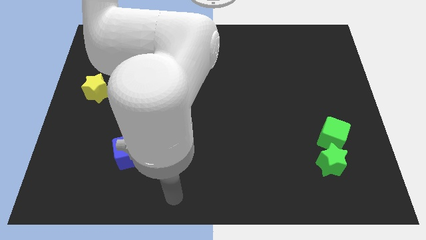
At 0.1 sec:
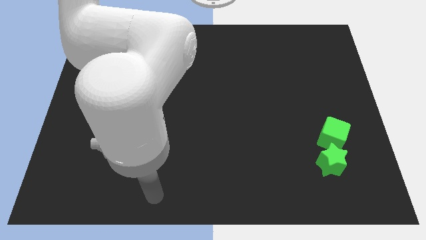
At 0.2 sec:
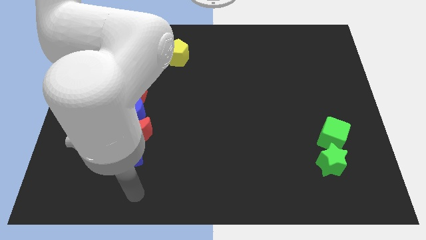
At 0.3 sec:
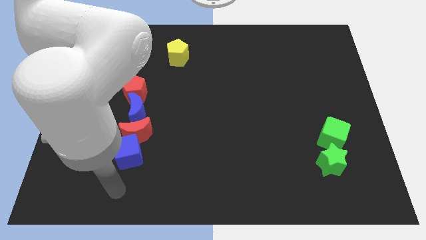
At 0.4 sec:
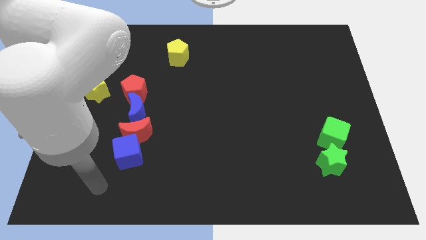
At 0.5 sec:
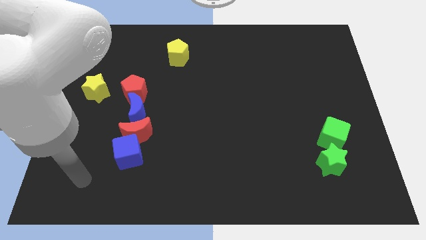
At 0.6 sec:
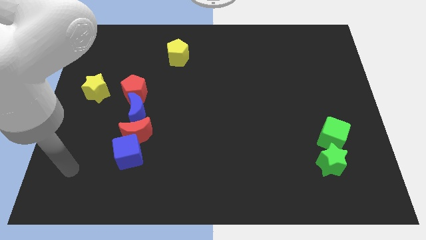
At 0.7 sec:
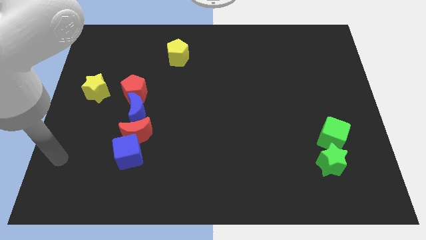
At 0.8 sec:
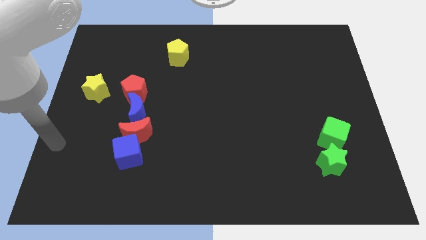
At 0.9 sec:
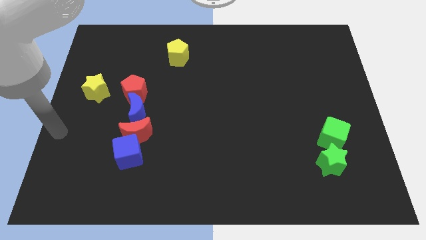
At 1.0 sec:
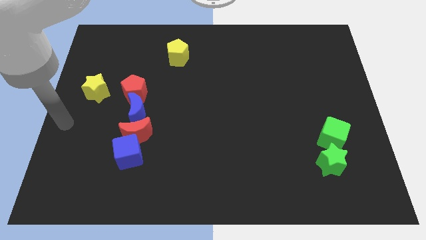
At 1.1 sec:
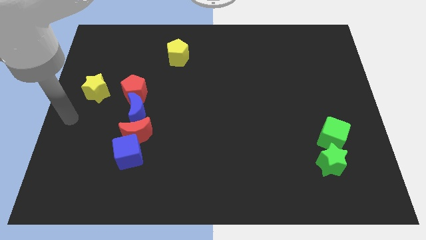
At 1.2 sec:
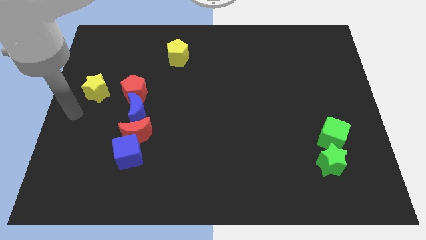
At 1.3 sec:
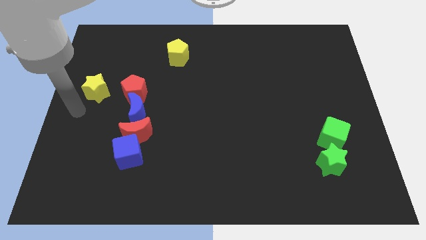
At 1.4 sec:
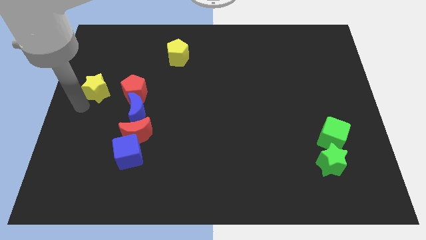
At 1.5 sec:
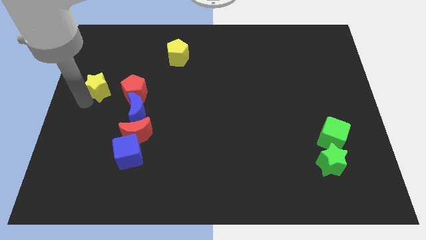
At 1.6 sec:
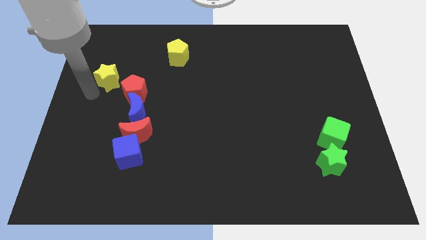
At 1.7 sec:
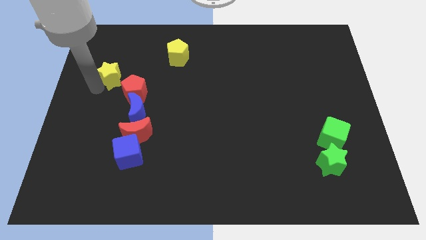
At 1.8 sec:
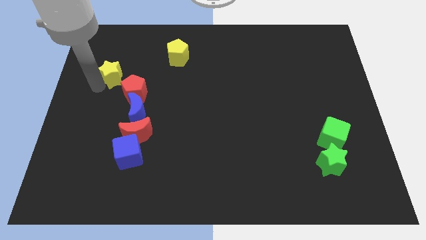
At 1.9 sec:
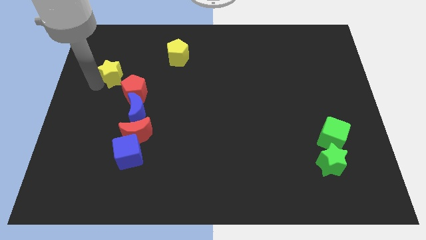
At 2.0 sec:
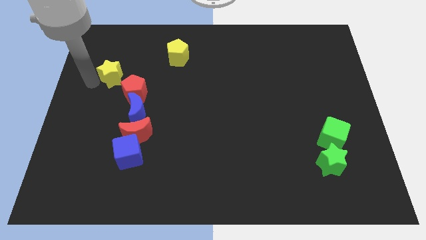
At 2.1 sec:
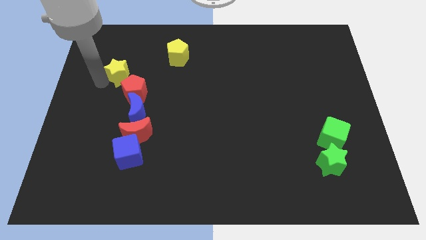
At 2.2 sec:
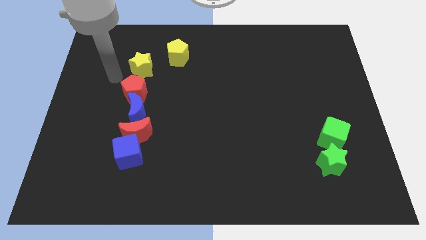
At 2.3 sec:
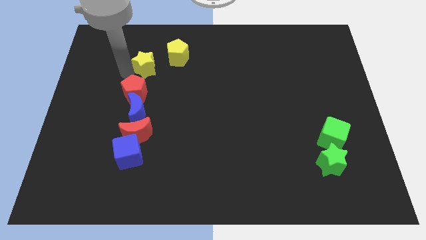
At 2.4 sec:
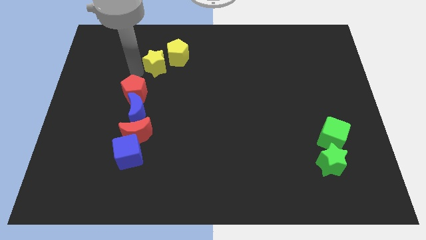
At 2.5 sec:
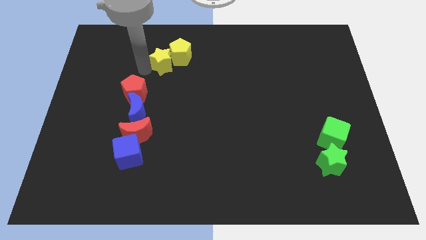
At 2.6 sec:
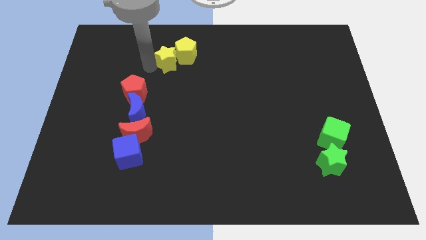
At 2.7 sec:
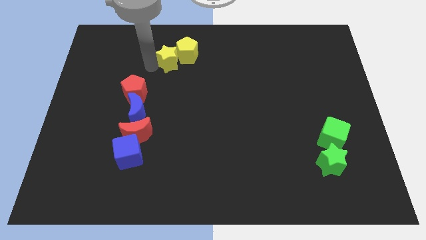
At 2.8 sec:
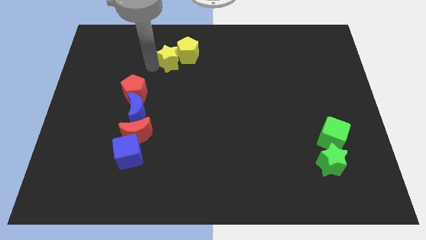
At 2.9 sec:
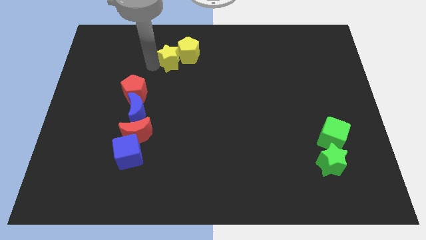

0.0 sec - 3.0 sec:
push the yellow star into yellow pentagon

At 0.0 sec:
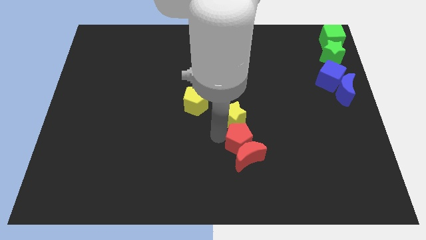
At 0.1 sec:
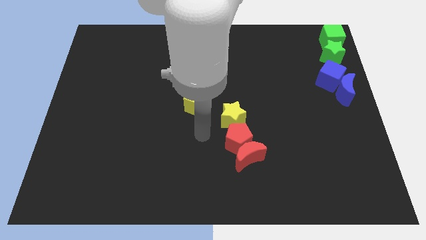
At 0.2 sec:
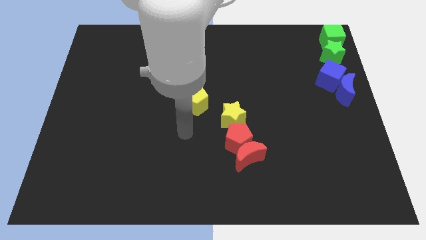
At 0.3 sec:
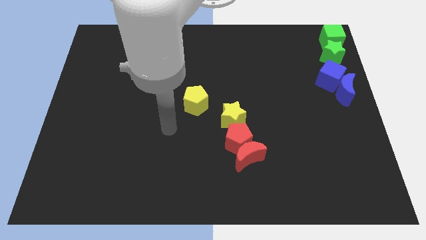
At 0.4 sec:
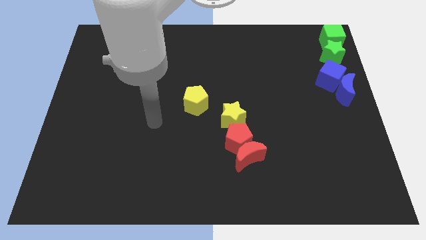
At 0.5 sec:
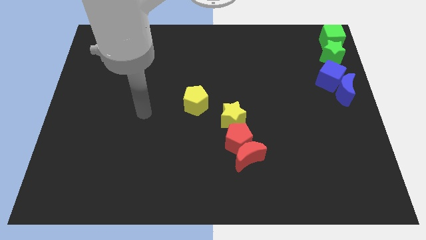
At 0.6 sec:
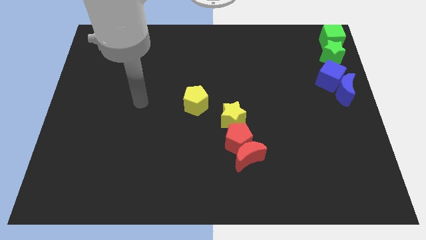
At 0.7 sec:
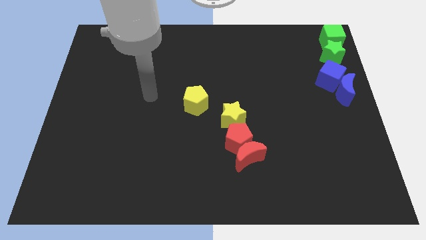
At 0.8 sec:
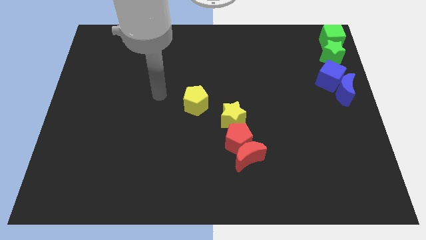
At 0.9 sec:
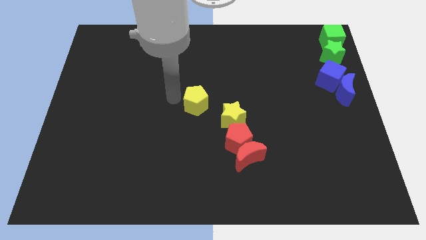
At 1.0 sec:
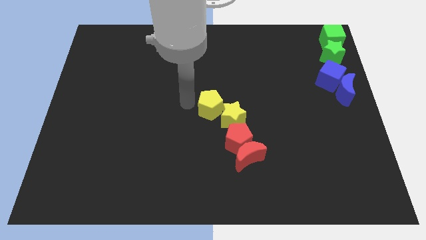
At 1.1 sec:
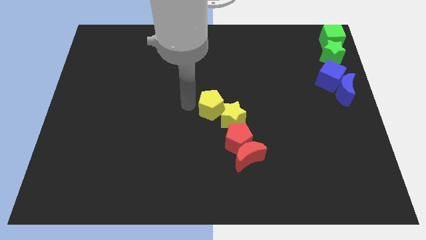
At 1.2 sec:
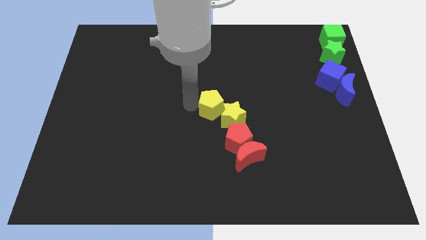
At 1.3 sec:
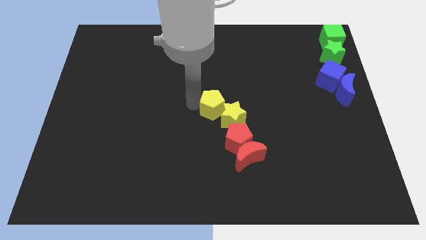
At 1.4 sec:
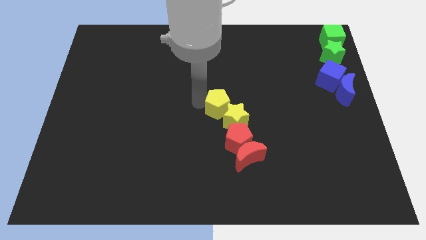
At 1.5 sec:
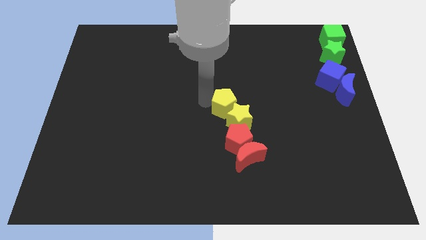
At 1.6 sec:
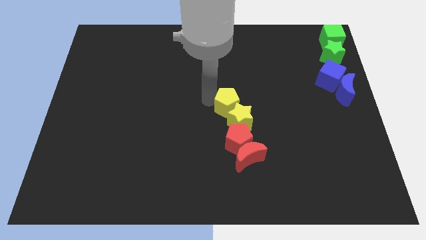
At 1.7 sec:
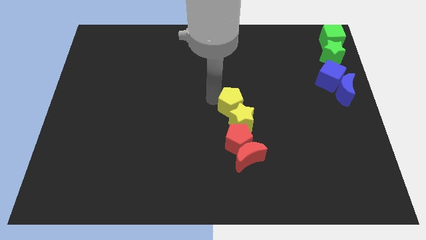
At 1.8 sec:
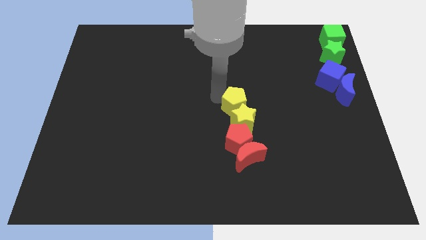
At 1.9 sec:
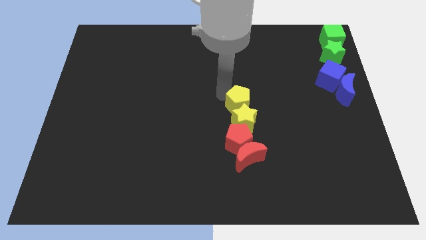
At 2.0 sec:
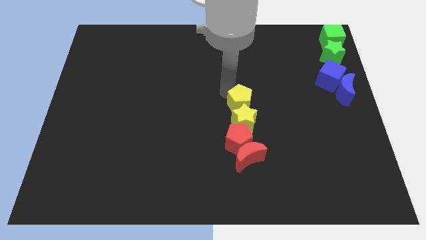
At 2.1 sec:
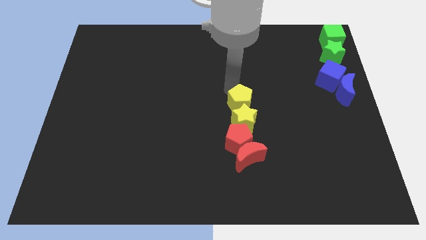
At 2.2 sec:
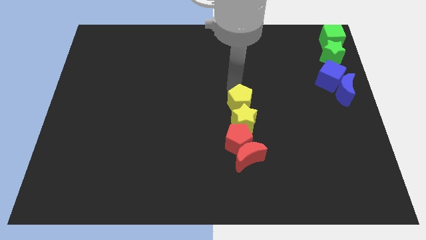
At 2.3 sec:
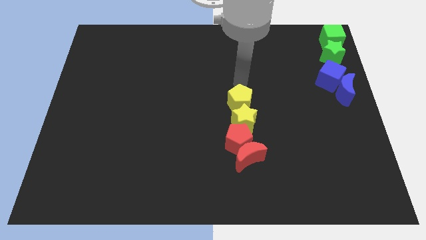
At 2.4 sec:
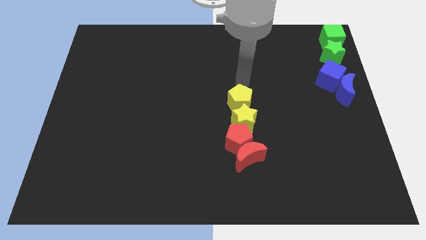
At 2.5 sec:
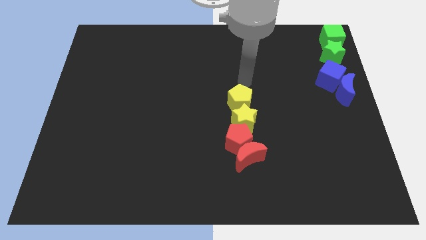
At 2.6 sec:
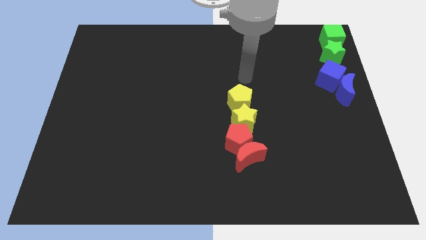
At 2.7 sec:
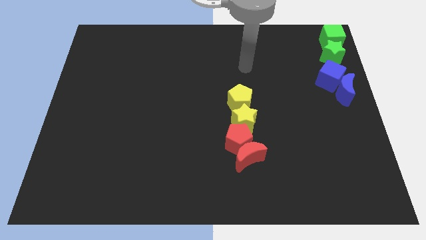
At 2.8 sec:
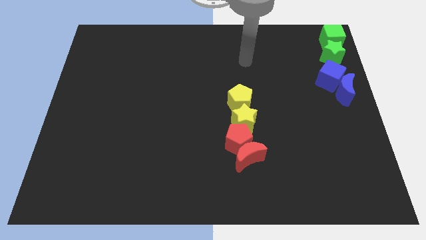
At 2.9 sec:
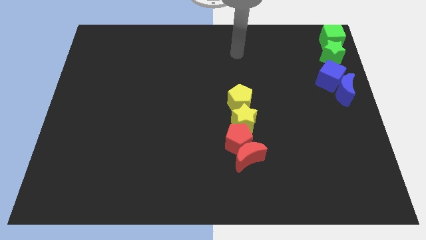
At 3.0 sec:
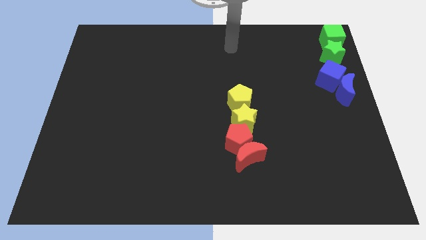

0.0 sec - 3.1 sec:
push the yellow pentagon to the top side of the yellow star
